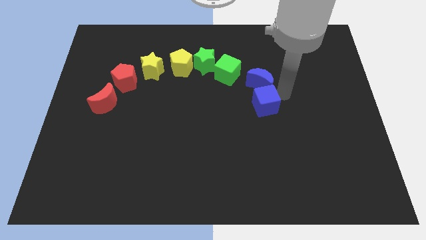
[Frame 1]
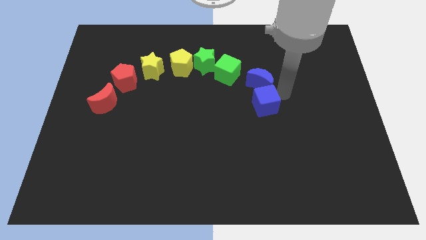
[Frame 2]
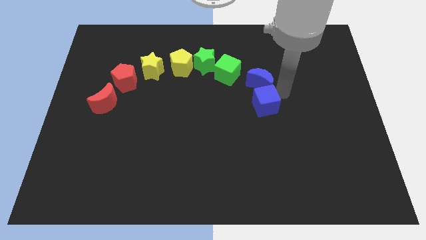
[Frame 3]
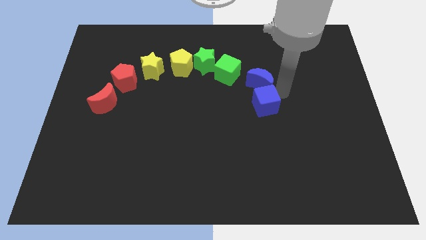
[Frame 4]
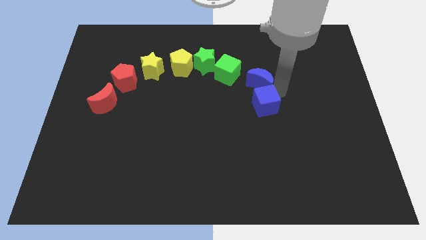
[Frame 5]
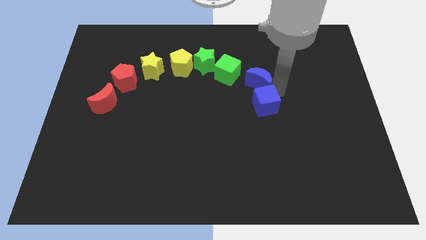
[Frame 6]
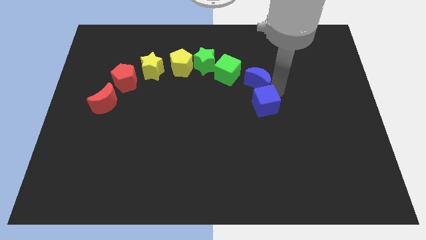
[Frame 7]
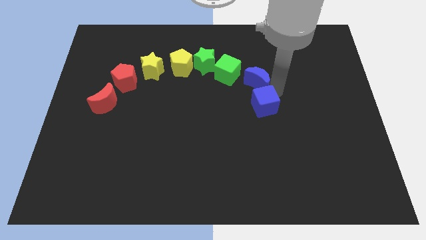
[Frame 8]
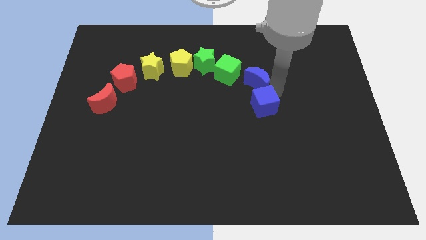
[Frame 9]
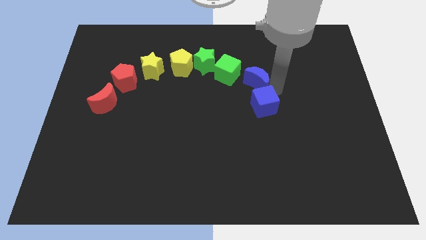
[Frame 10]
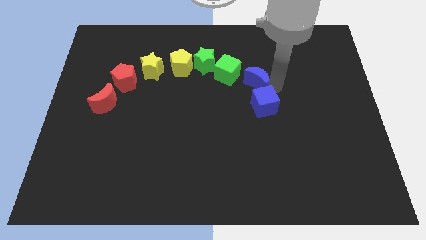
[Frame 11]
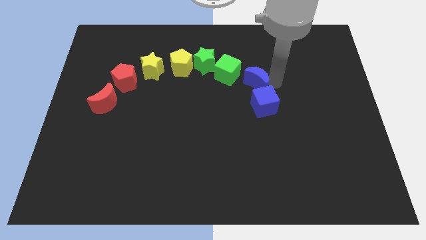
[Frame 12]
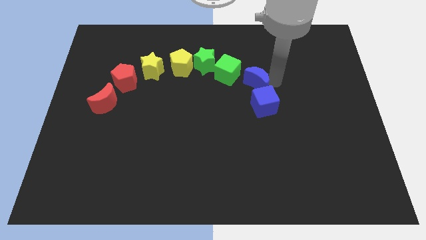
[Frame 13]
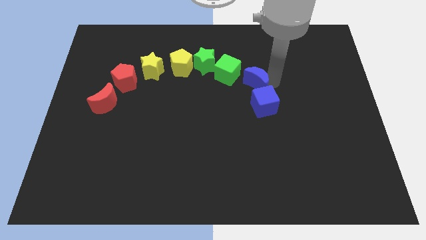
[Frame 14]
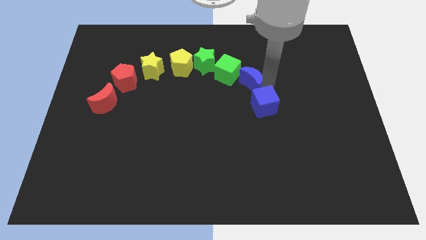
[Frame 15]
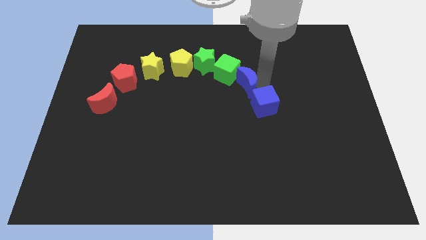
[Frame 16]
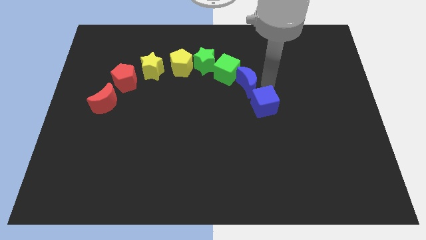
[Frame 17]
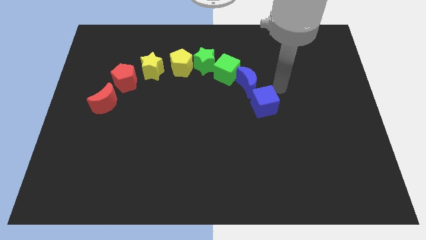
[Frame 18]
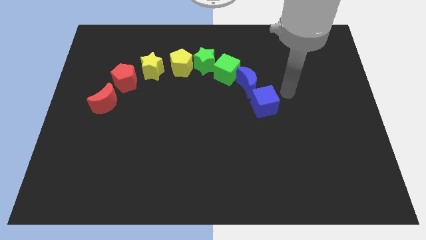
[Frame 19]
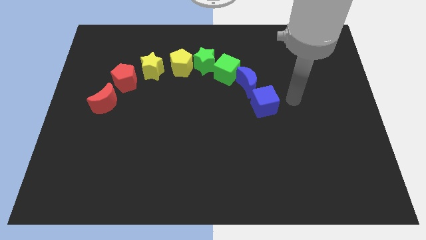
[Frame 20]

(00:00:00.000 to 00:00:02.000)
slightly move the blue crescent

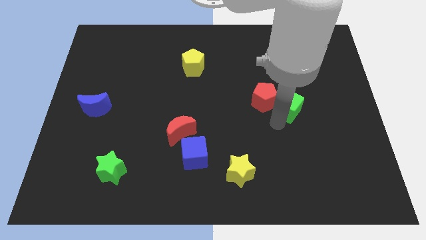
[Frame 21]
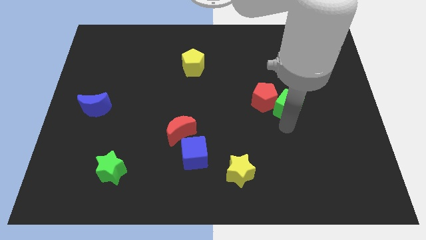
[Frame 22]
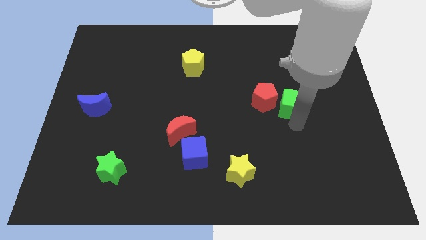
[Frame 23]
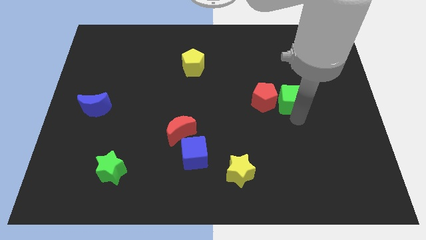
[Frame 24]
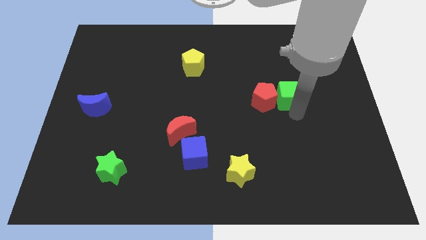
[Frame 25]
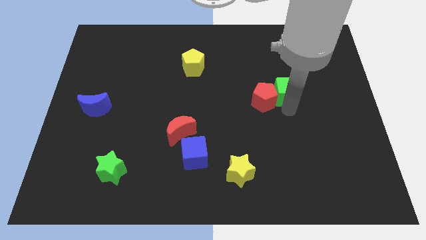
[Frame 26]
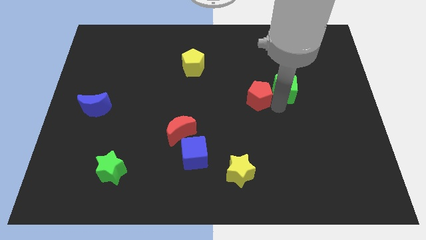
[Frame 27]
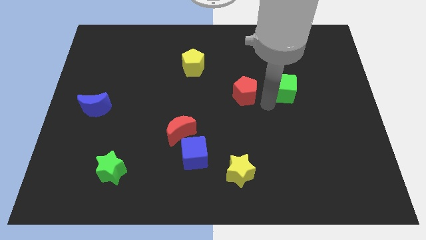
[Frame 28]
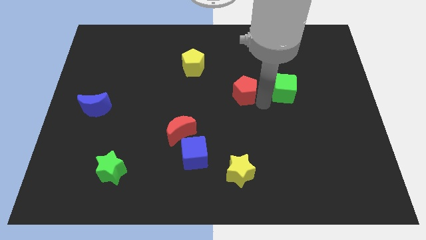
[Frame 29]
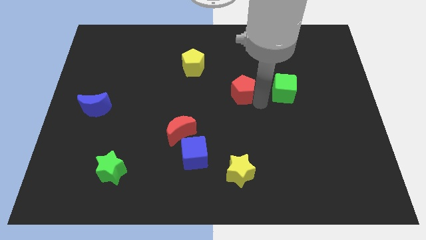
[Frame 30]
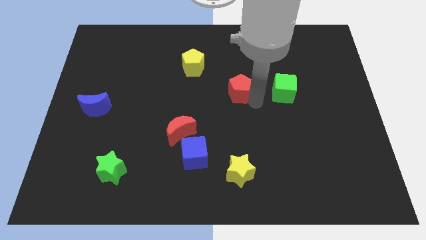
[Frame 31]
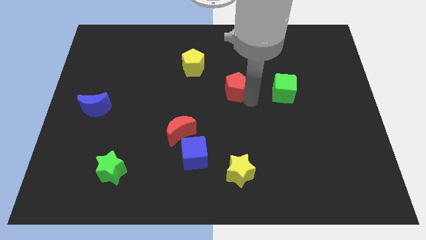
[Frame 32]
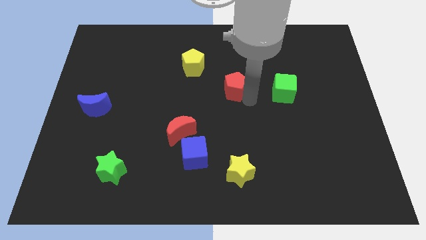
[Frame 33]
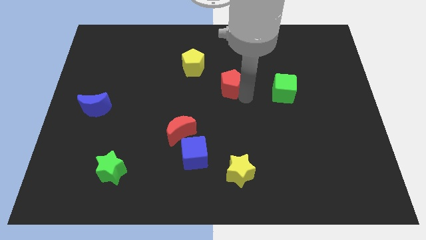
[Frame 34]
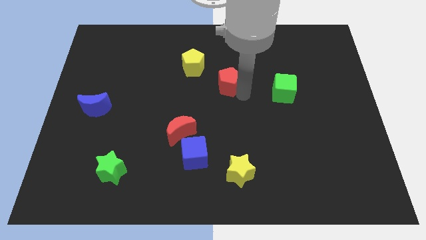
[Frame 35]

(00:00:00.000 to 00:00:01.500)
separate the red pentagon from the green cube

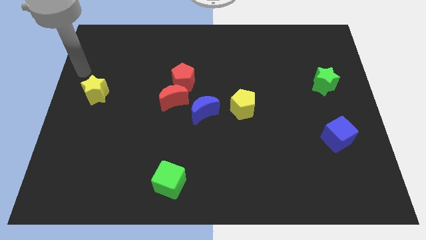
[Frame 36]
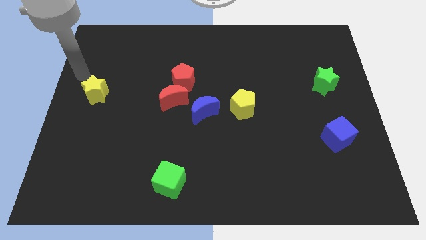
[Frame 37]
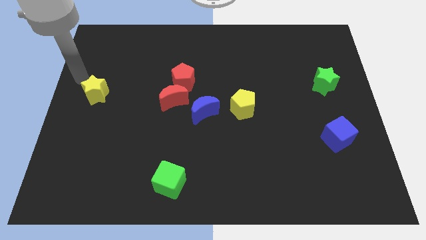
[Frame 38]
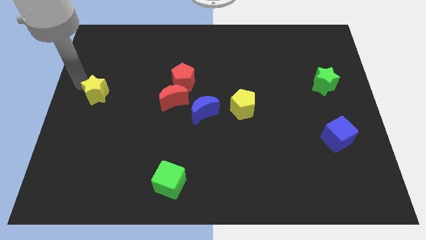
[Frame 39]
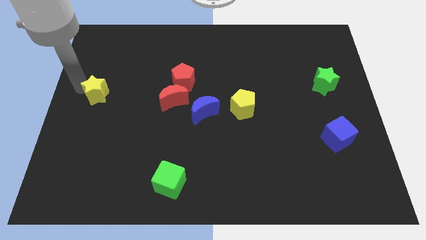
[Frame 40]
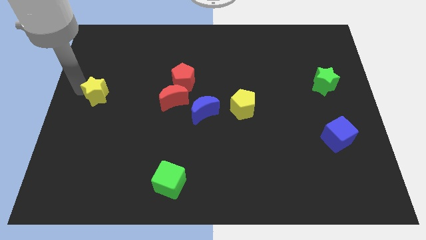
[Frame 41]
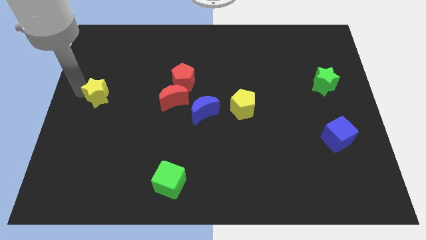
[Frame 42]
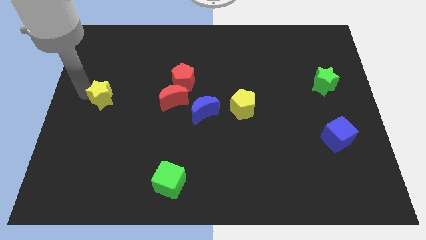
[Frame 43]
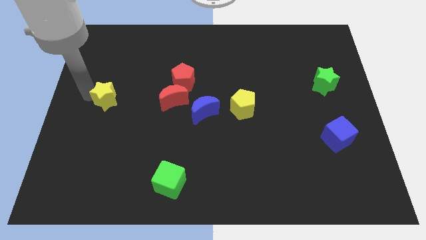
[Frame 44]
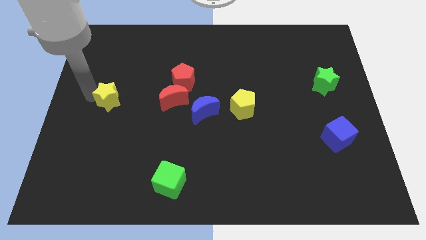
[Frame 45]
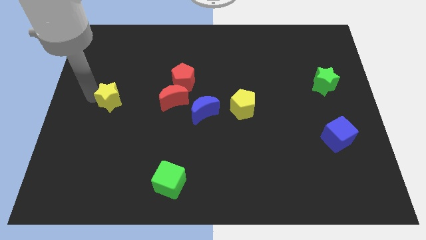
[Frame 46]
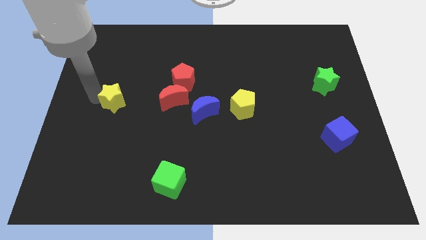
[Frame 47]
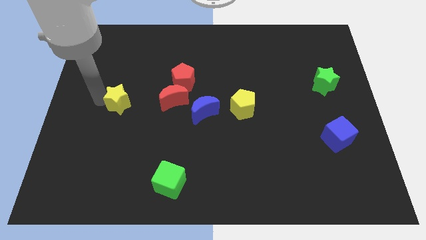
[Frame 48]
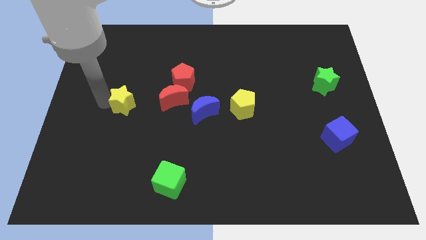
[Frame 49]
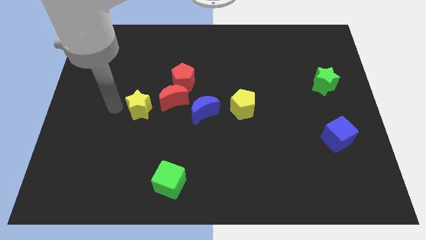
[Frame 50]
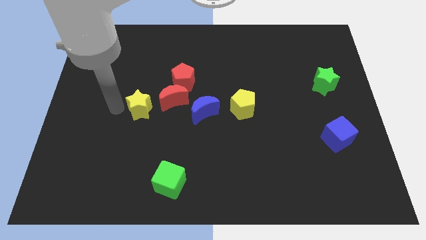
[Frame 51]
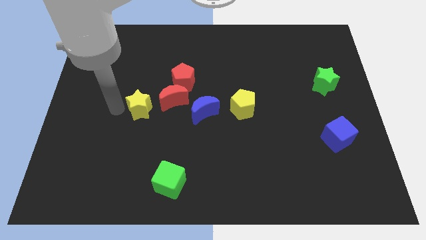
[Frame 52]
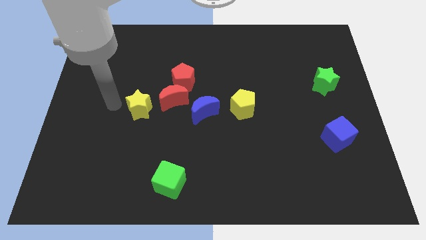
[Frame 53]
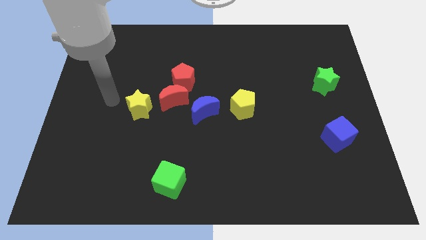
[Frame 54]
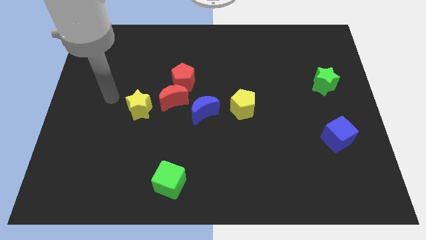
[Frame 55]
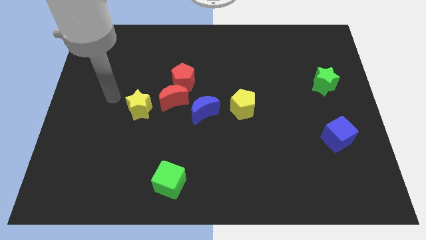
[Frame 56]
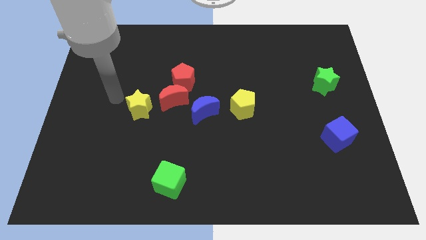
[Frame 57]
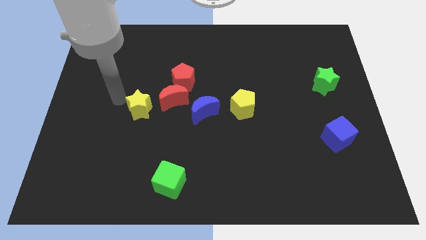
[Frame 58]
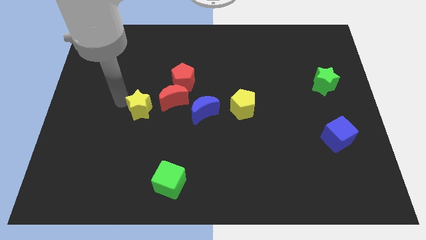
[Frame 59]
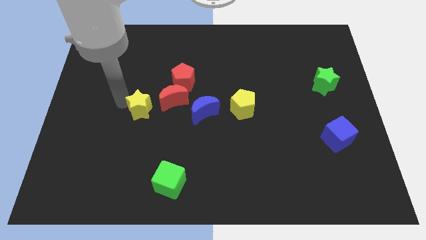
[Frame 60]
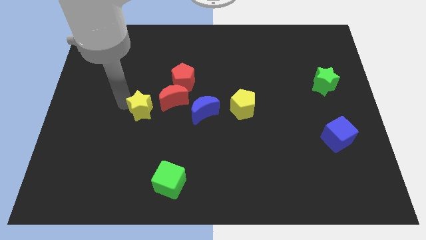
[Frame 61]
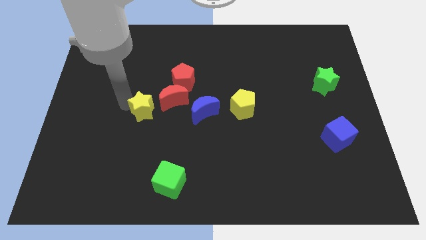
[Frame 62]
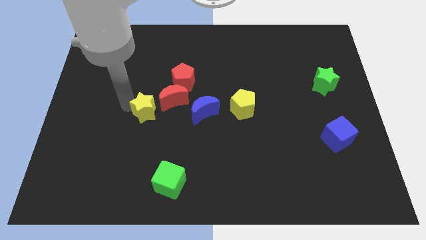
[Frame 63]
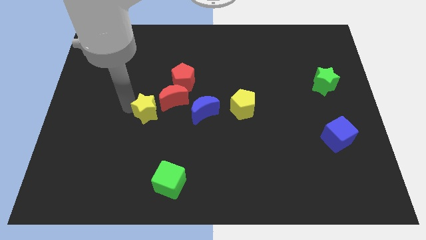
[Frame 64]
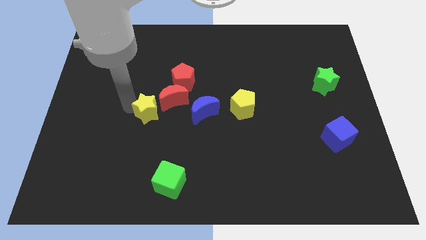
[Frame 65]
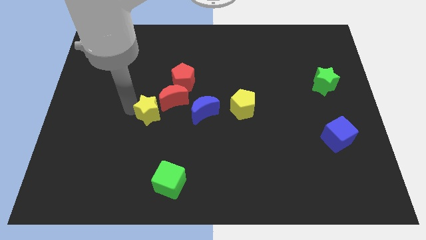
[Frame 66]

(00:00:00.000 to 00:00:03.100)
push the yellow star towards the left of red crescent

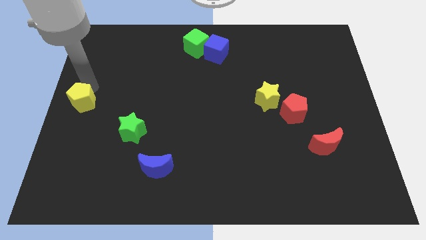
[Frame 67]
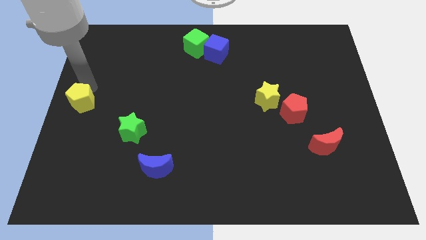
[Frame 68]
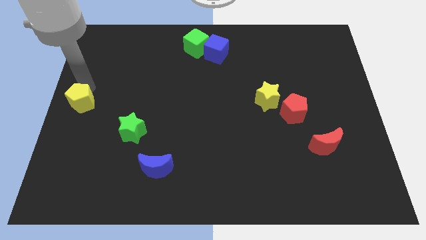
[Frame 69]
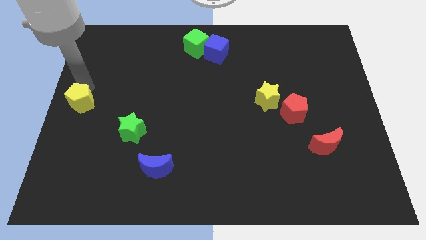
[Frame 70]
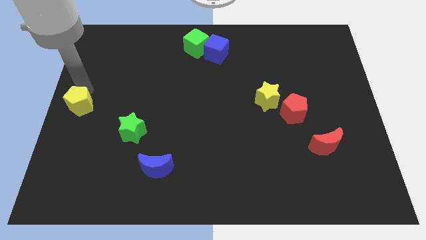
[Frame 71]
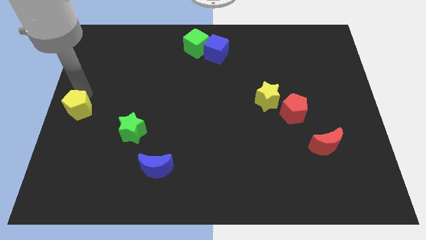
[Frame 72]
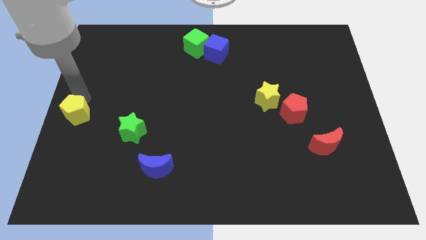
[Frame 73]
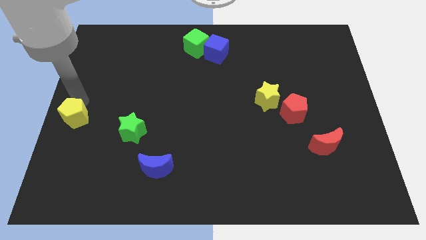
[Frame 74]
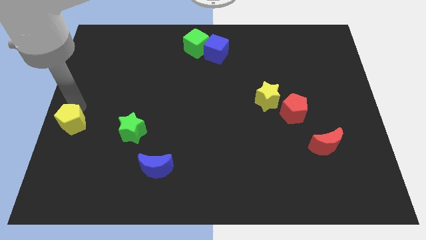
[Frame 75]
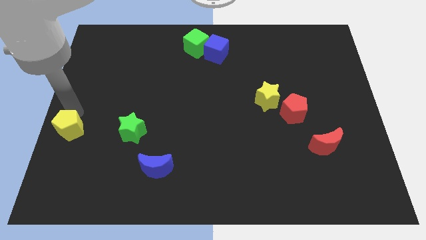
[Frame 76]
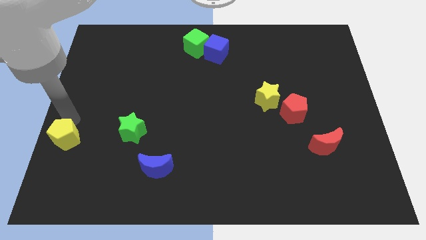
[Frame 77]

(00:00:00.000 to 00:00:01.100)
place yellow pentagon parallel left to green star

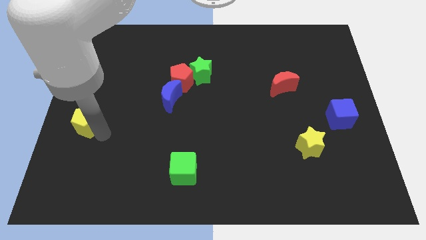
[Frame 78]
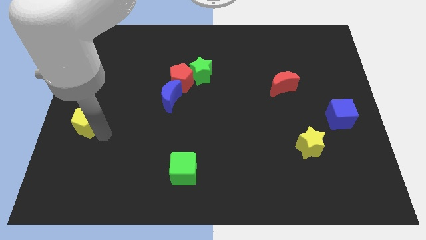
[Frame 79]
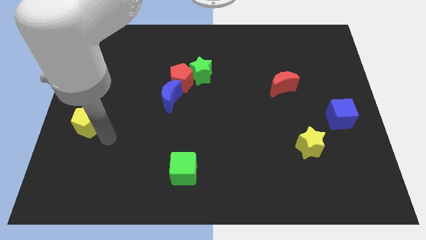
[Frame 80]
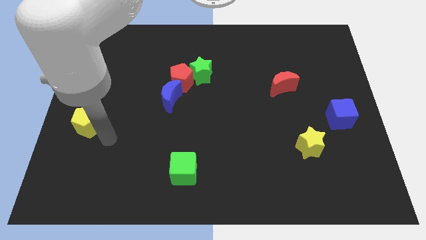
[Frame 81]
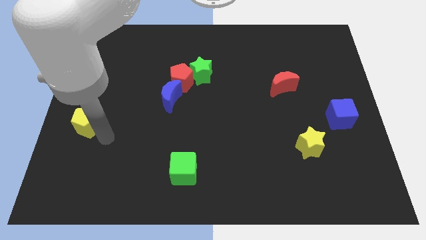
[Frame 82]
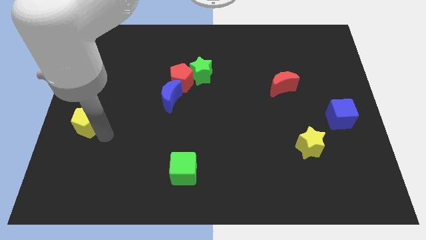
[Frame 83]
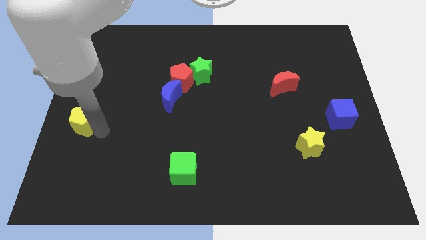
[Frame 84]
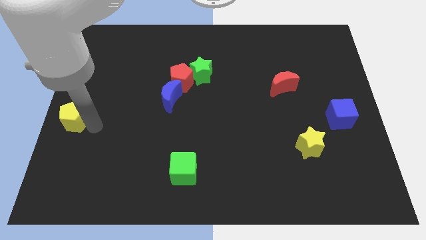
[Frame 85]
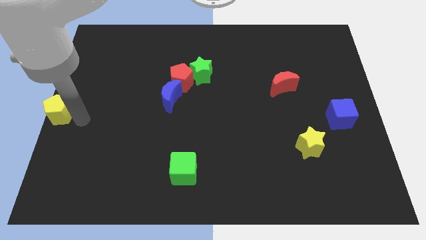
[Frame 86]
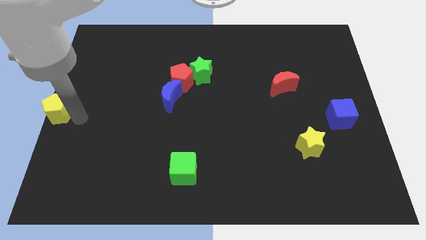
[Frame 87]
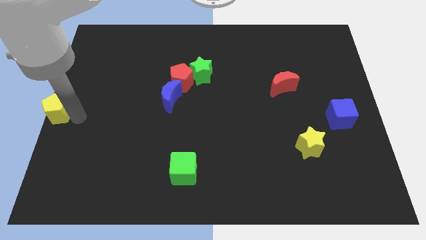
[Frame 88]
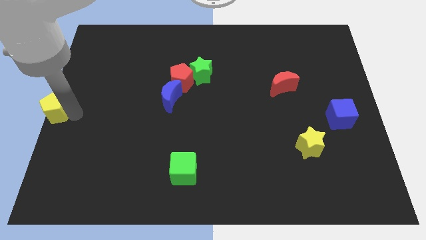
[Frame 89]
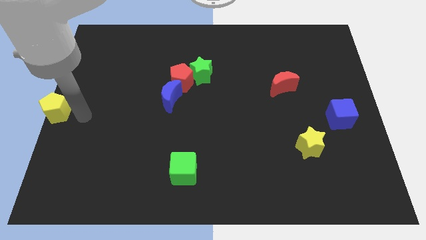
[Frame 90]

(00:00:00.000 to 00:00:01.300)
place the yellow pentagon at the center left of the board
